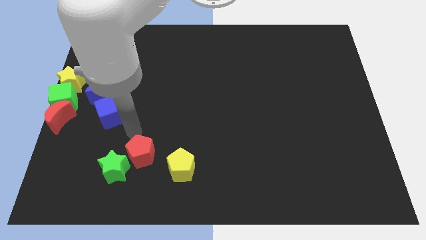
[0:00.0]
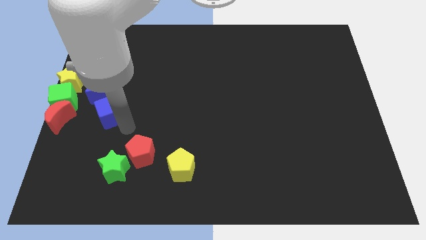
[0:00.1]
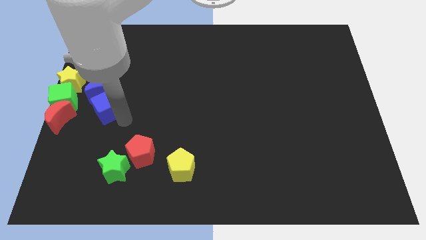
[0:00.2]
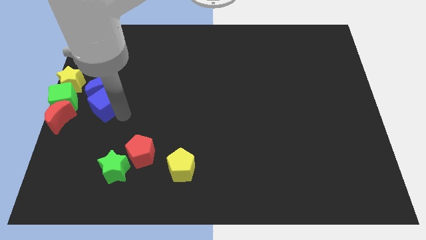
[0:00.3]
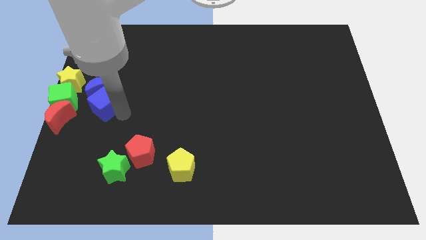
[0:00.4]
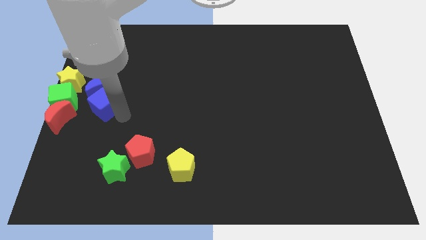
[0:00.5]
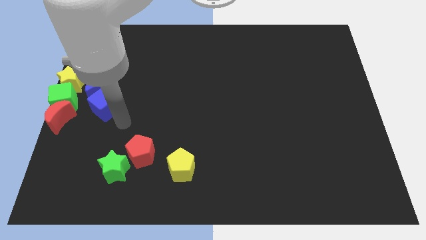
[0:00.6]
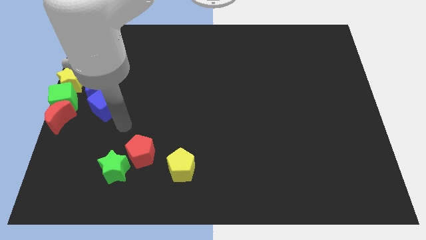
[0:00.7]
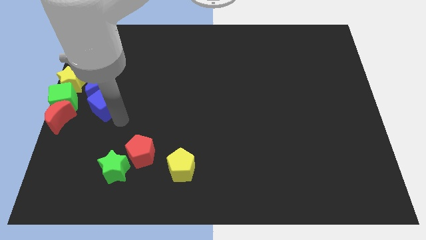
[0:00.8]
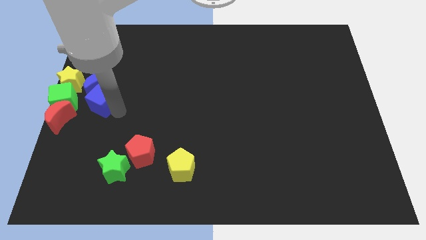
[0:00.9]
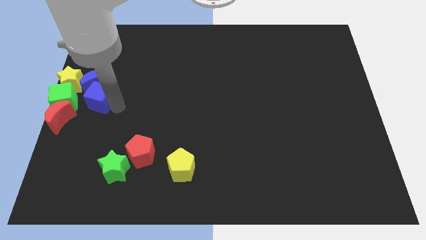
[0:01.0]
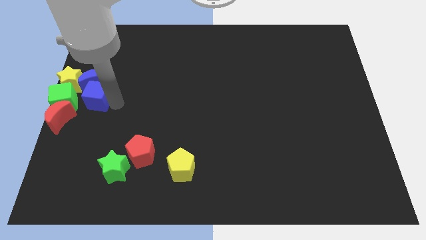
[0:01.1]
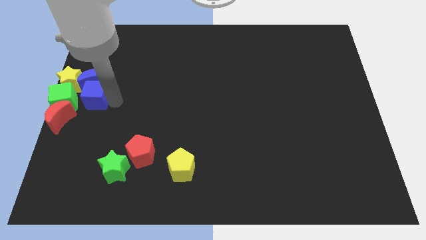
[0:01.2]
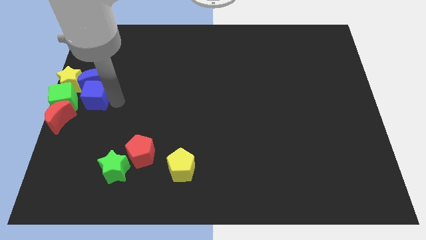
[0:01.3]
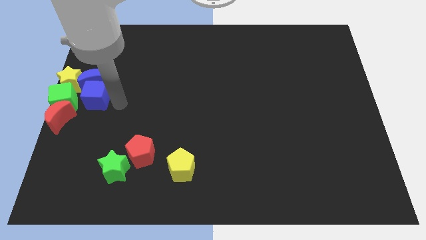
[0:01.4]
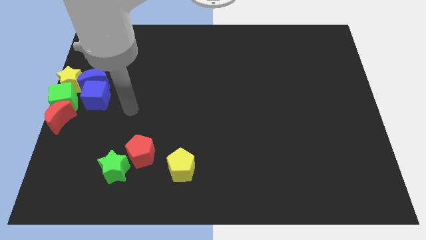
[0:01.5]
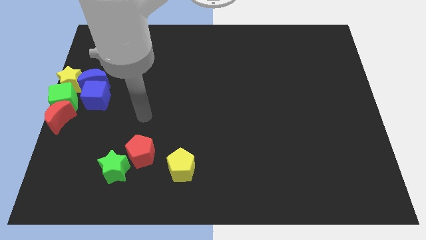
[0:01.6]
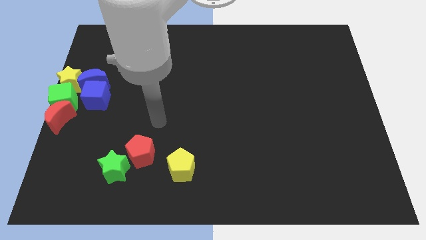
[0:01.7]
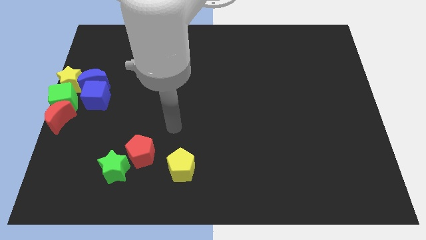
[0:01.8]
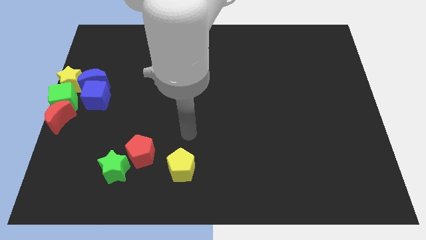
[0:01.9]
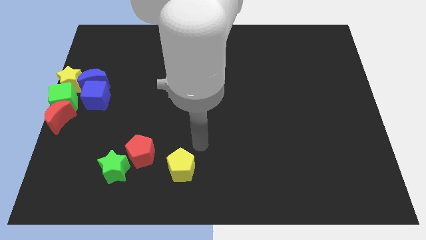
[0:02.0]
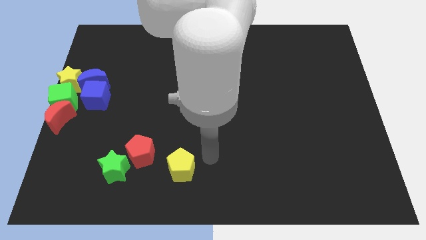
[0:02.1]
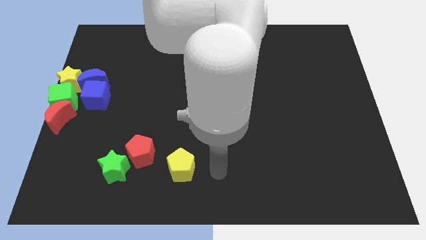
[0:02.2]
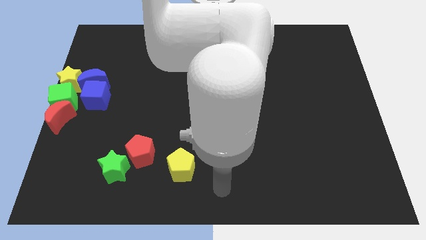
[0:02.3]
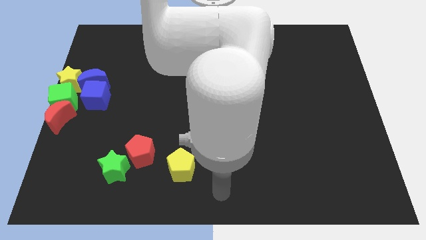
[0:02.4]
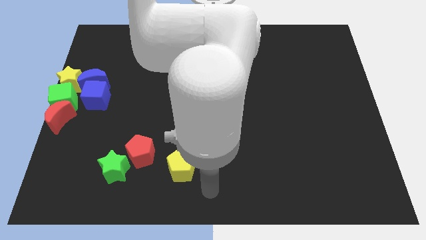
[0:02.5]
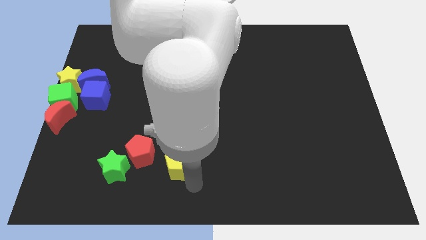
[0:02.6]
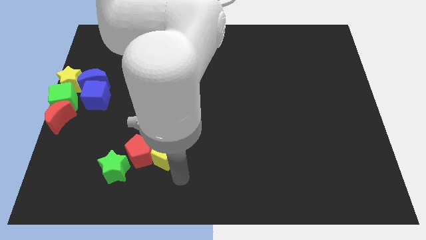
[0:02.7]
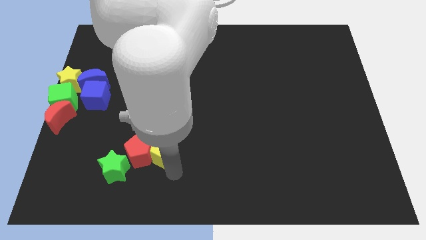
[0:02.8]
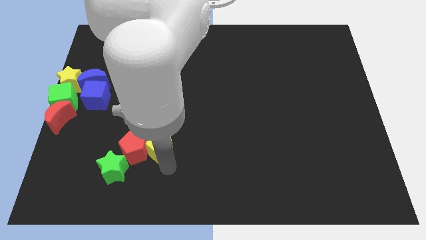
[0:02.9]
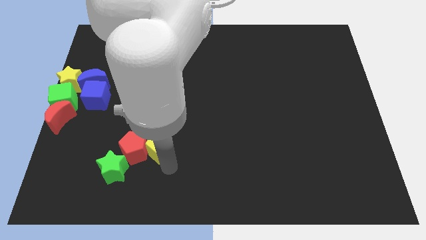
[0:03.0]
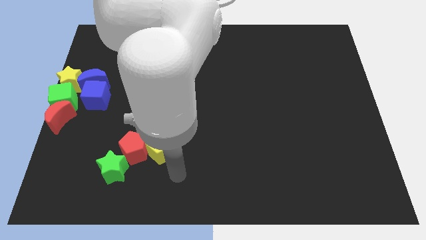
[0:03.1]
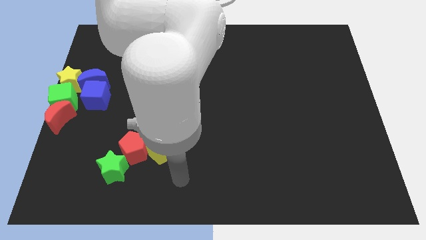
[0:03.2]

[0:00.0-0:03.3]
push the yellow pentagon into the red pentagon

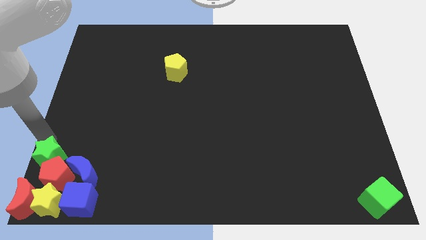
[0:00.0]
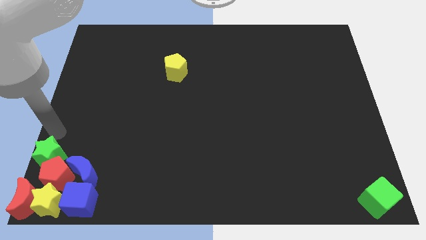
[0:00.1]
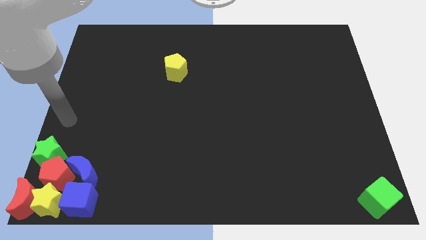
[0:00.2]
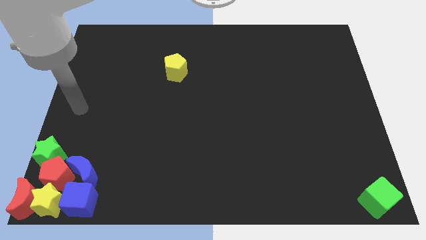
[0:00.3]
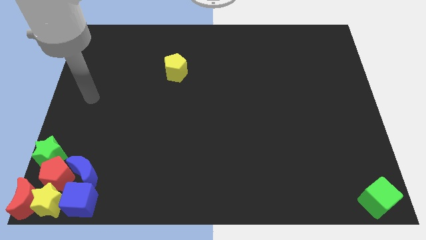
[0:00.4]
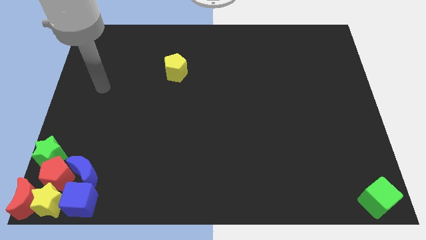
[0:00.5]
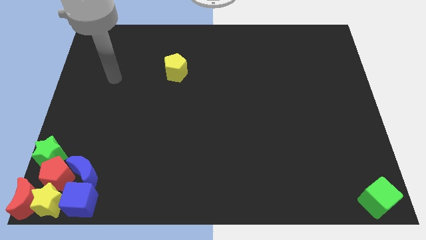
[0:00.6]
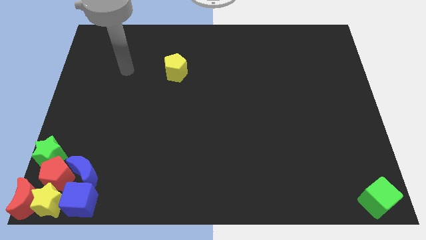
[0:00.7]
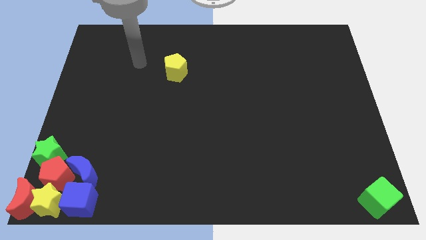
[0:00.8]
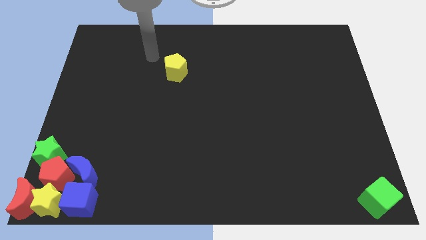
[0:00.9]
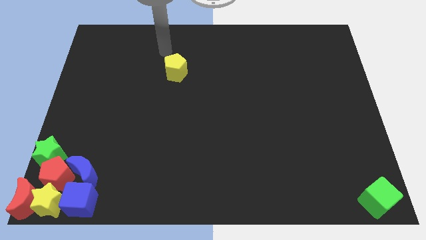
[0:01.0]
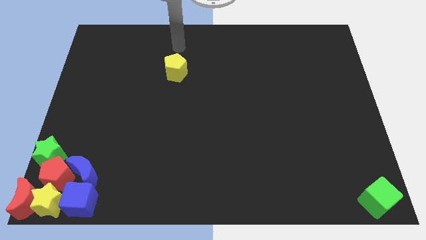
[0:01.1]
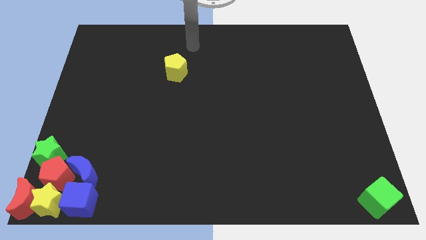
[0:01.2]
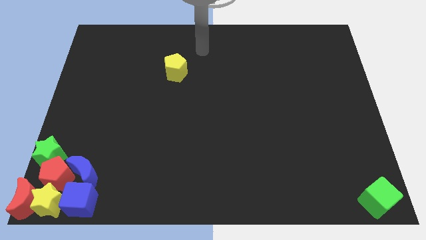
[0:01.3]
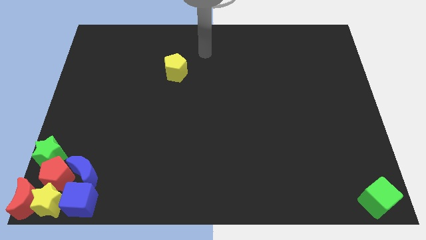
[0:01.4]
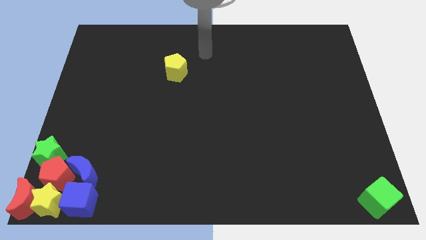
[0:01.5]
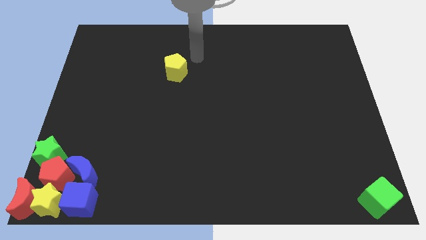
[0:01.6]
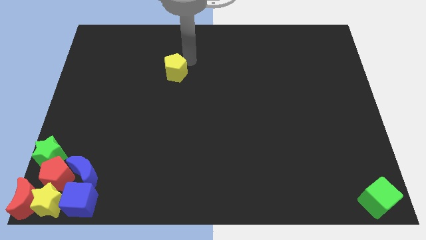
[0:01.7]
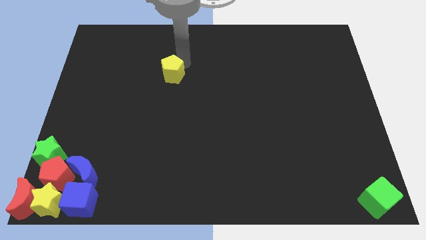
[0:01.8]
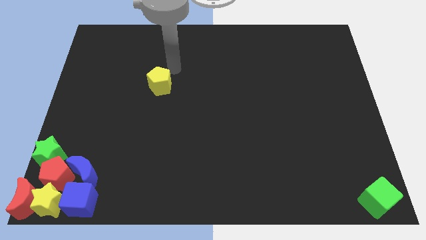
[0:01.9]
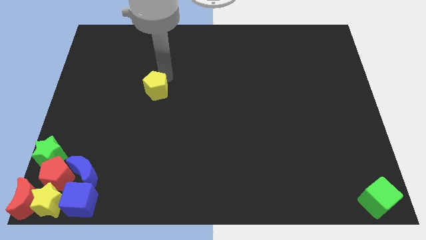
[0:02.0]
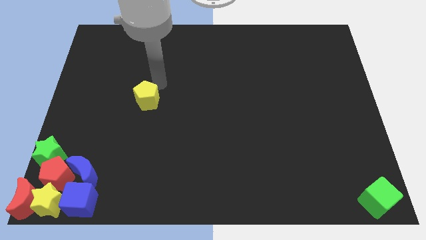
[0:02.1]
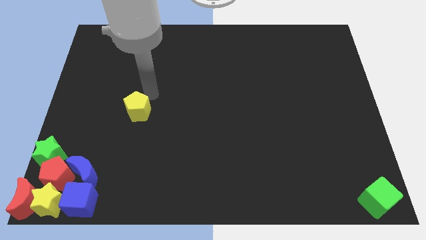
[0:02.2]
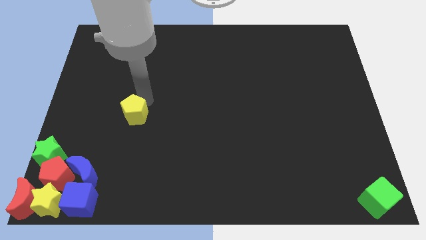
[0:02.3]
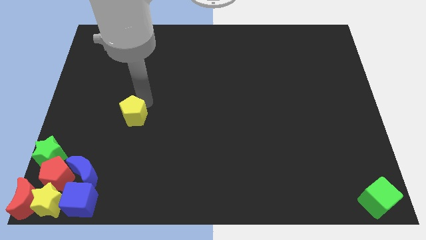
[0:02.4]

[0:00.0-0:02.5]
place the yellow pentagon diagonally top right to the green star

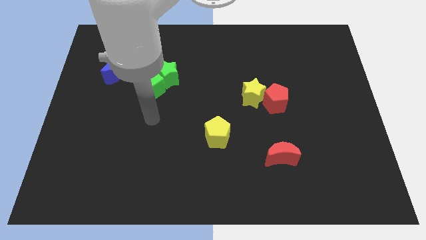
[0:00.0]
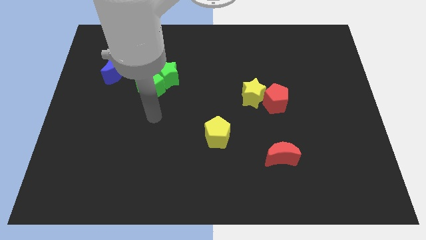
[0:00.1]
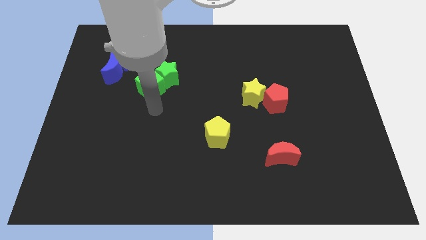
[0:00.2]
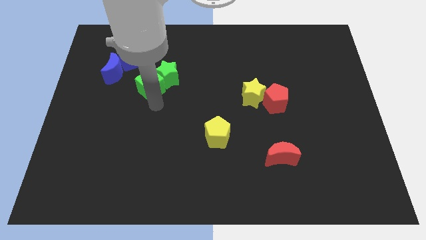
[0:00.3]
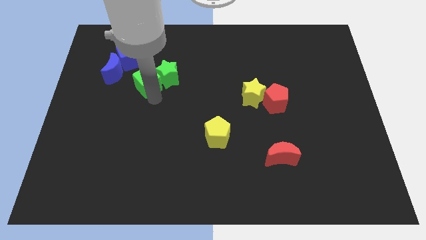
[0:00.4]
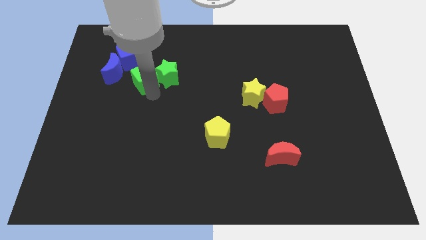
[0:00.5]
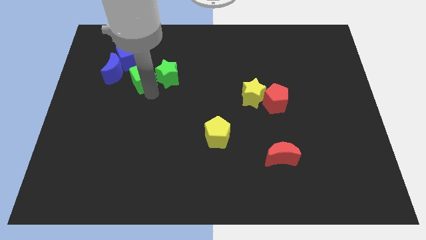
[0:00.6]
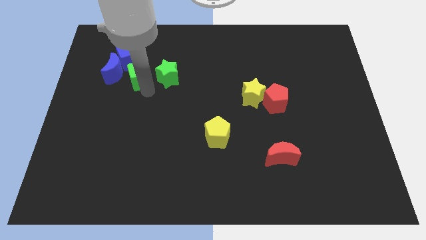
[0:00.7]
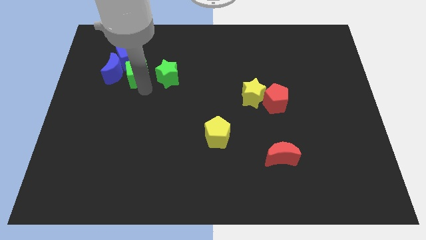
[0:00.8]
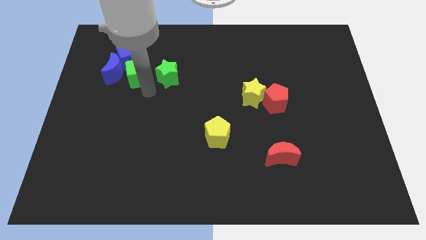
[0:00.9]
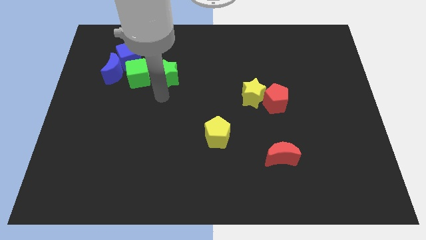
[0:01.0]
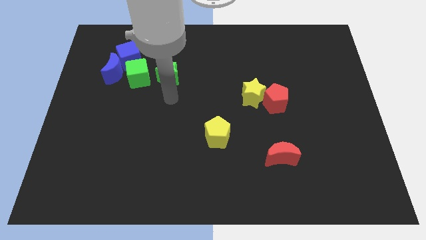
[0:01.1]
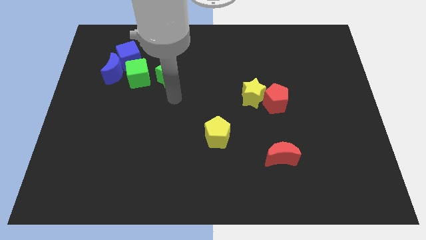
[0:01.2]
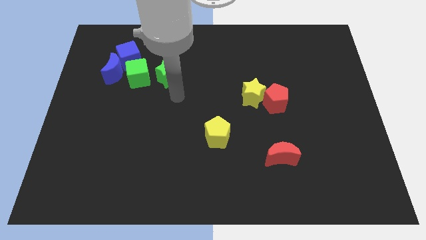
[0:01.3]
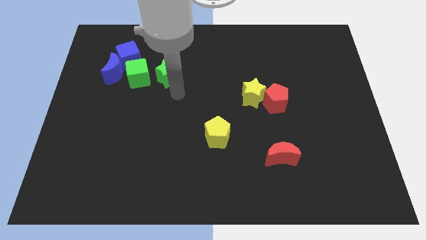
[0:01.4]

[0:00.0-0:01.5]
move the green cube to the right of the blue moon

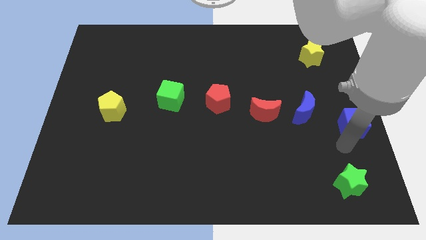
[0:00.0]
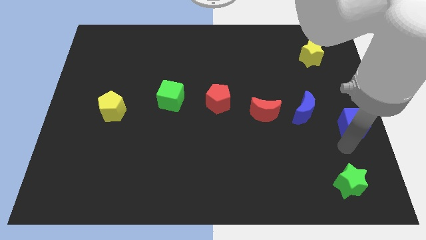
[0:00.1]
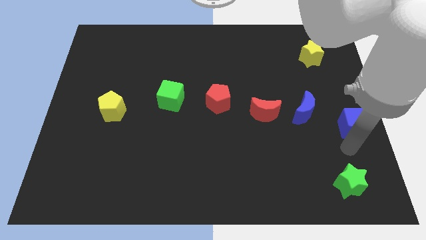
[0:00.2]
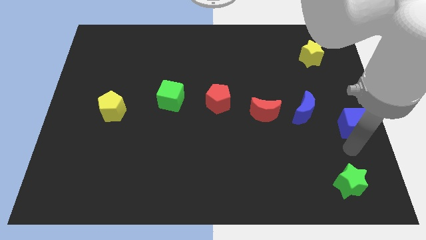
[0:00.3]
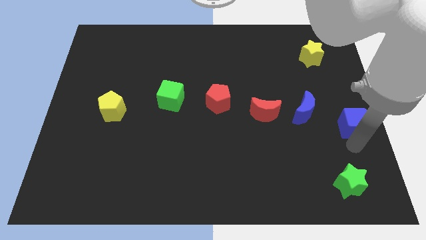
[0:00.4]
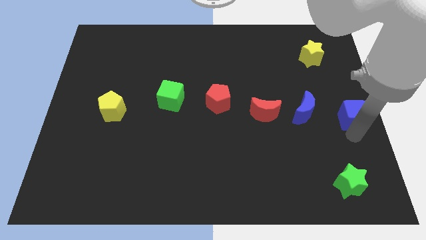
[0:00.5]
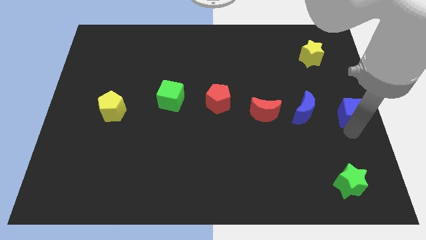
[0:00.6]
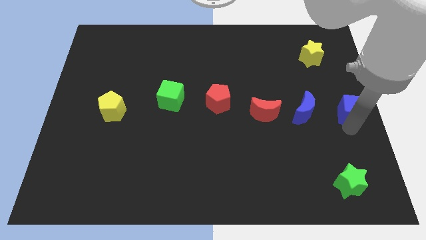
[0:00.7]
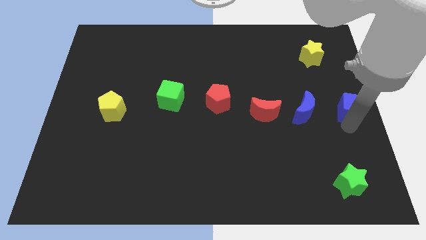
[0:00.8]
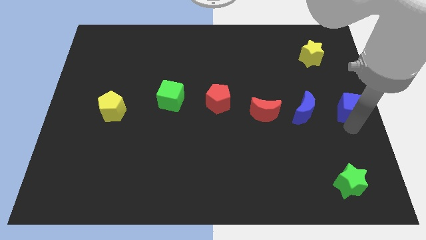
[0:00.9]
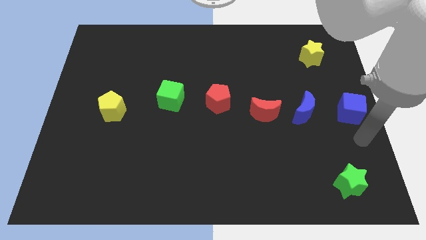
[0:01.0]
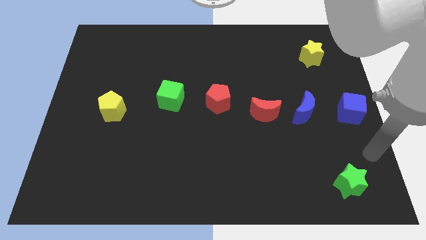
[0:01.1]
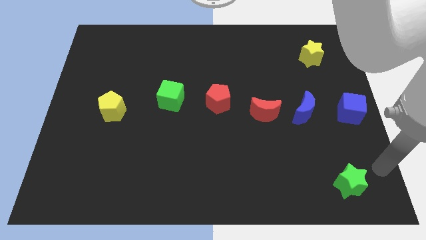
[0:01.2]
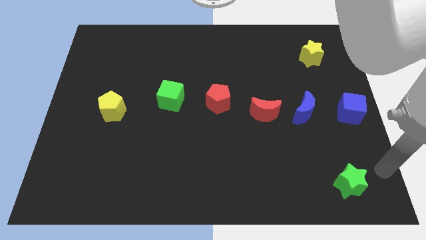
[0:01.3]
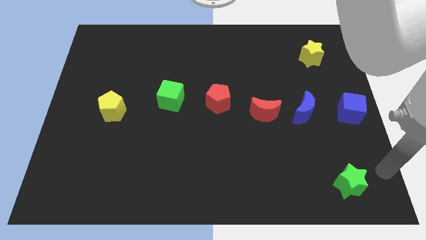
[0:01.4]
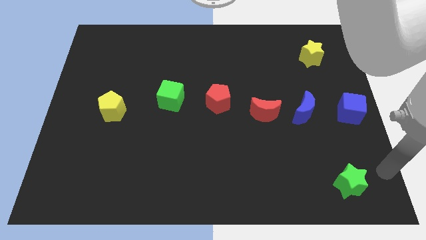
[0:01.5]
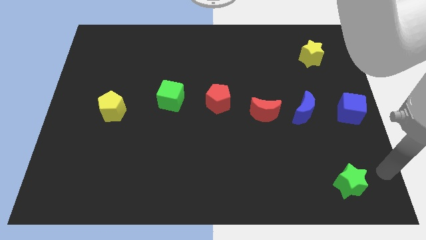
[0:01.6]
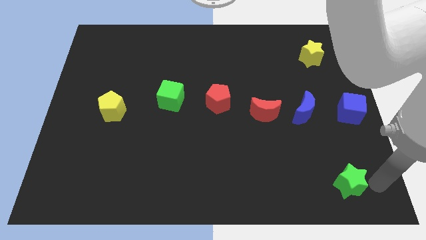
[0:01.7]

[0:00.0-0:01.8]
move the blue cube upwards

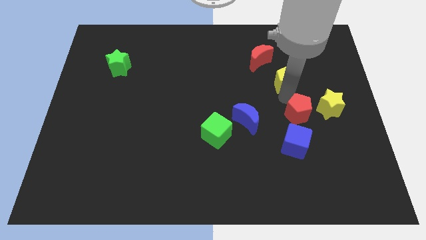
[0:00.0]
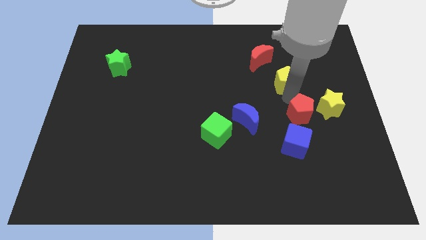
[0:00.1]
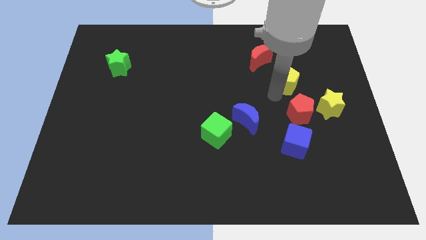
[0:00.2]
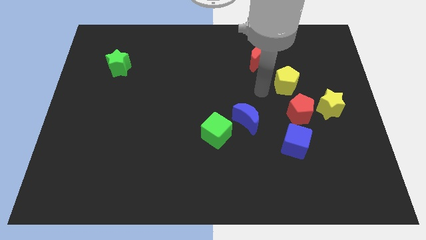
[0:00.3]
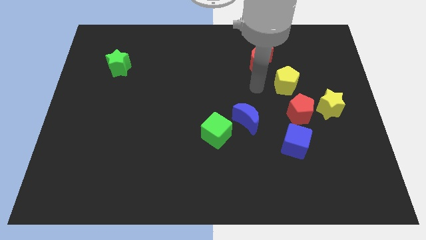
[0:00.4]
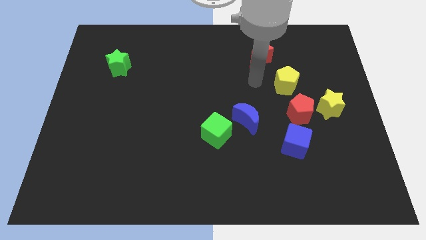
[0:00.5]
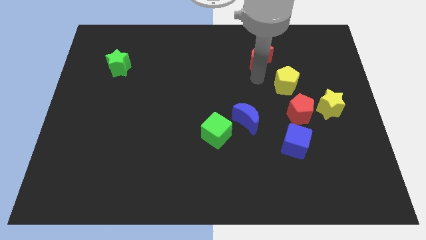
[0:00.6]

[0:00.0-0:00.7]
place your arm below red moon
